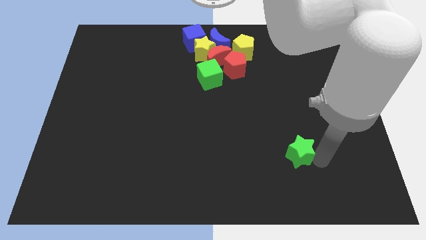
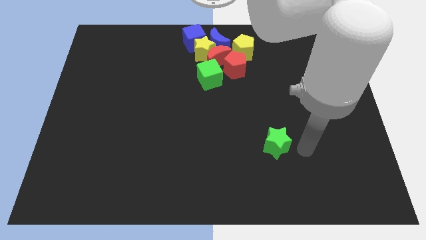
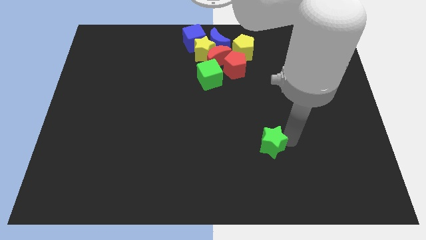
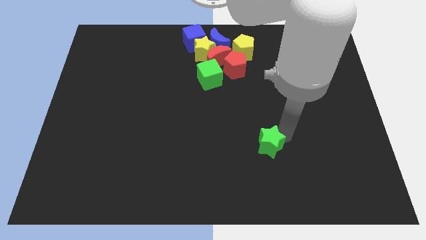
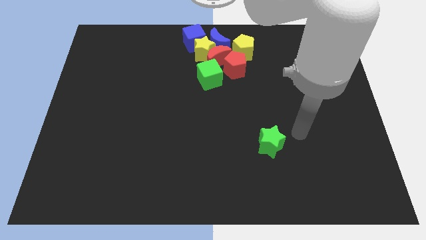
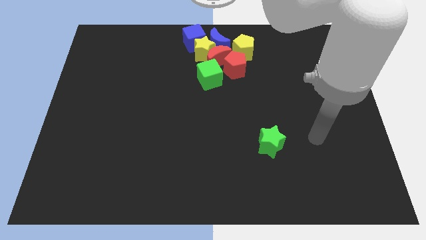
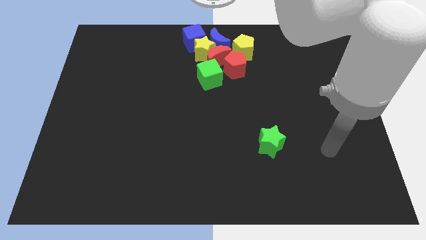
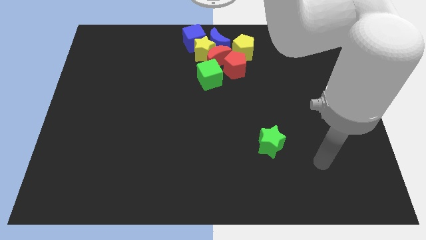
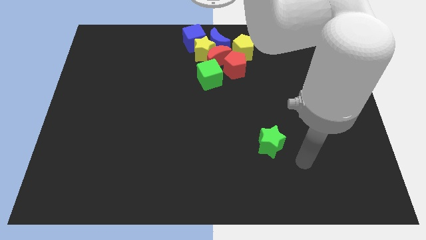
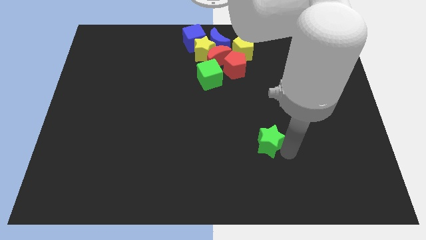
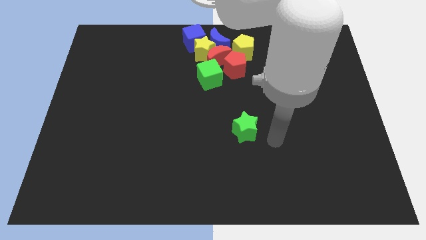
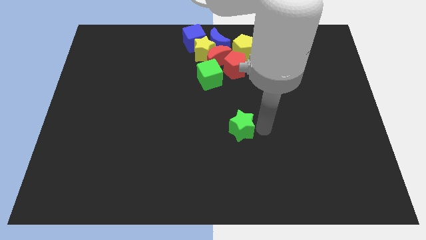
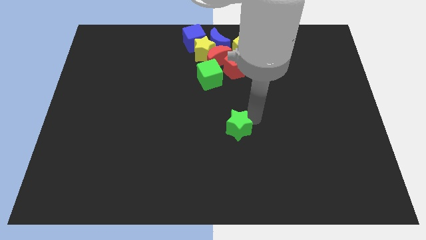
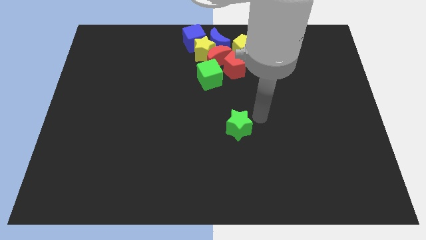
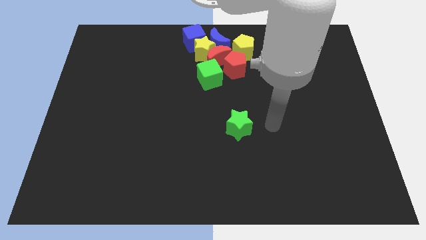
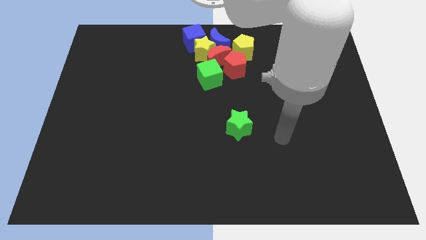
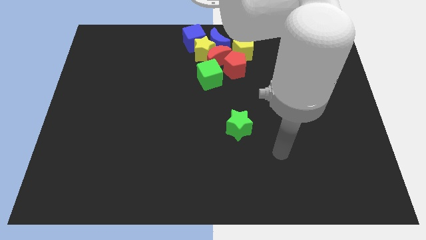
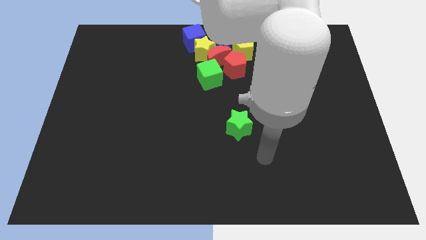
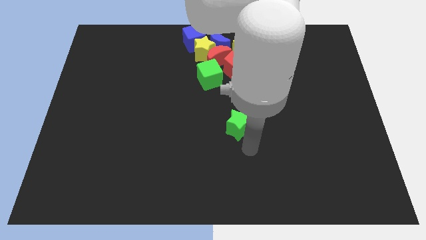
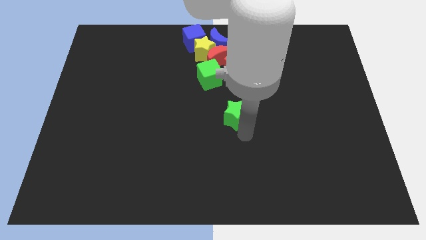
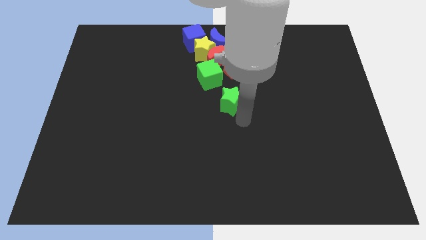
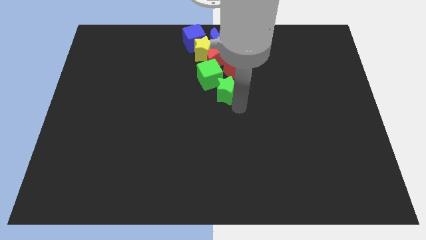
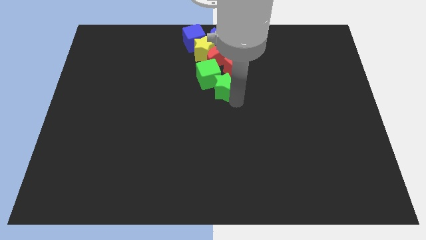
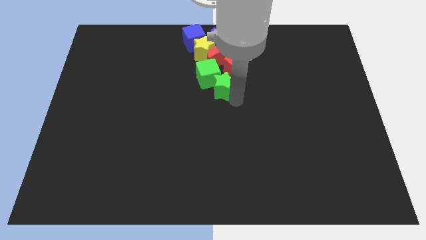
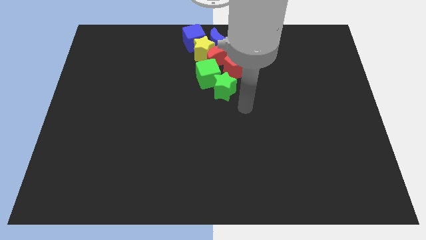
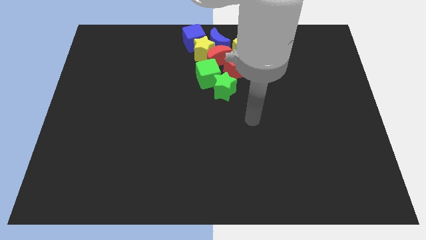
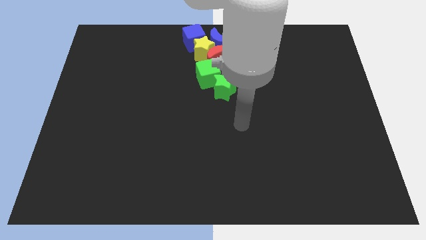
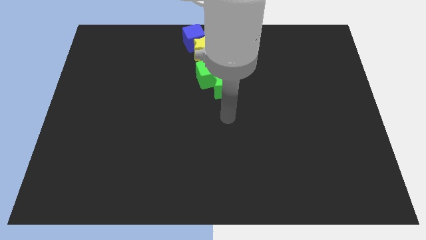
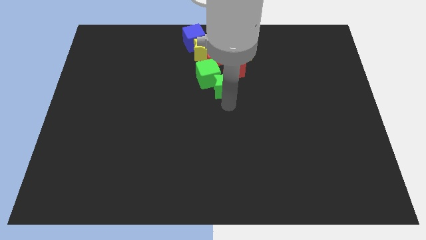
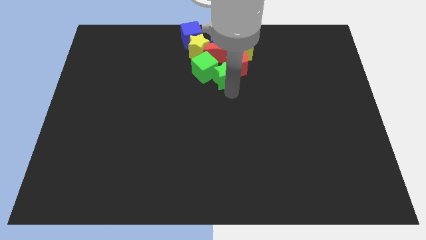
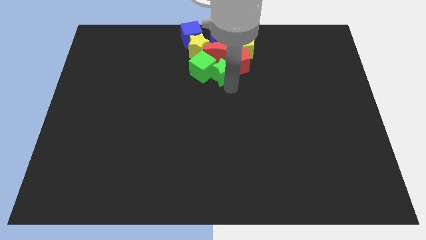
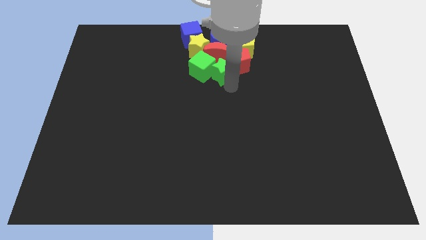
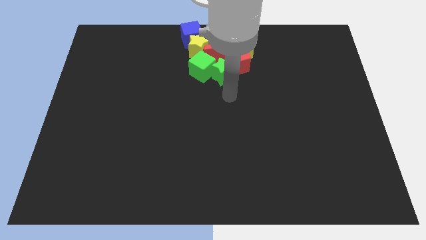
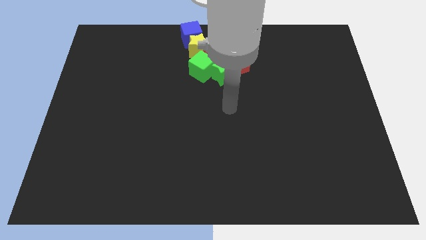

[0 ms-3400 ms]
push the green star into the green cube and red pentagon

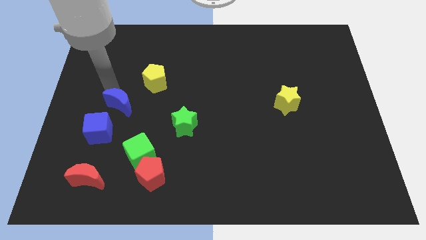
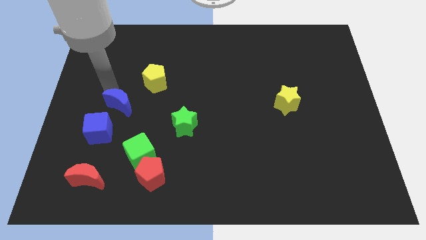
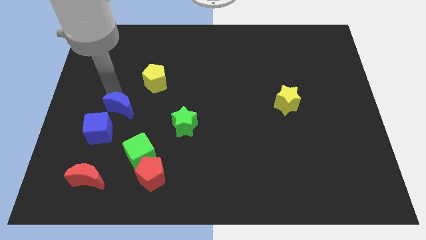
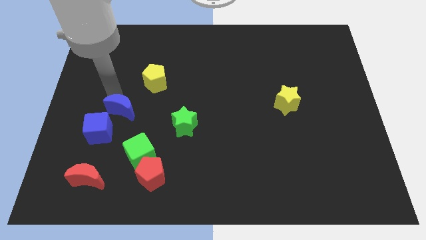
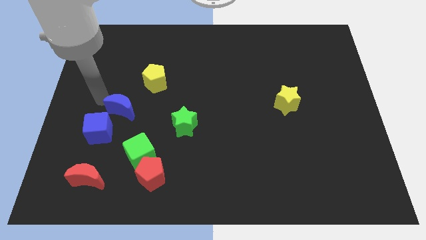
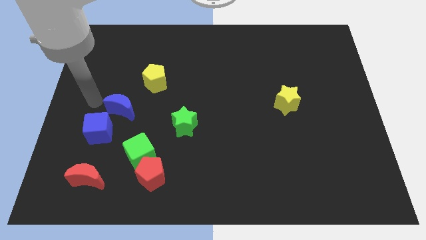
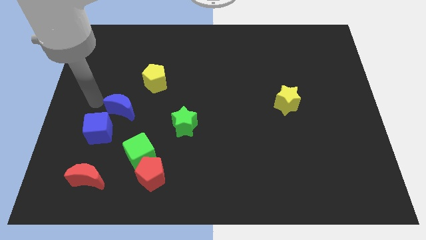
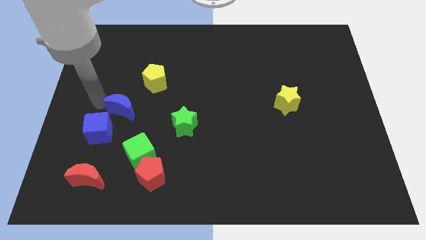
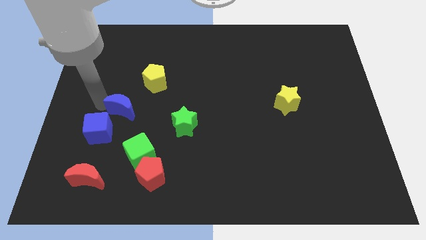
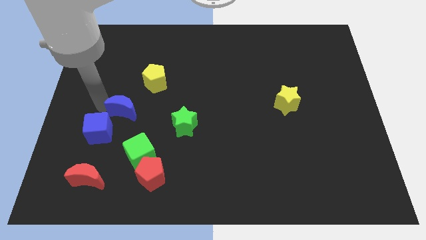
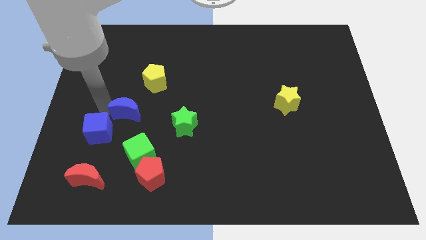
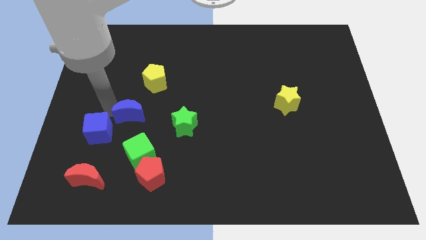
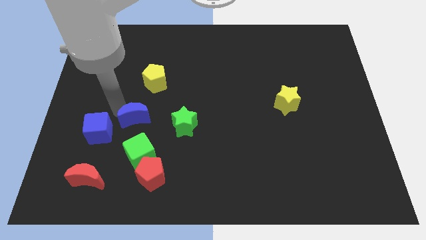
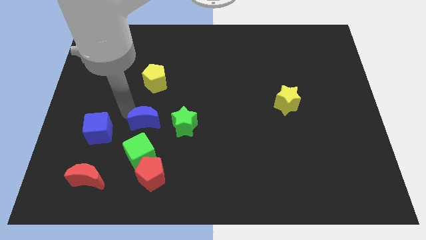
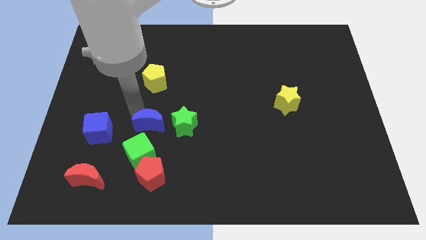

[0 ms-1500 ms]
move blue moon left beside the green star

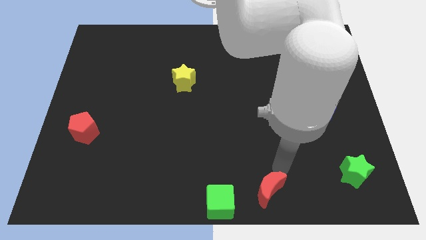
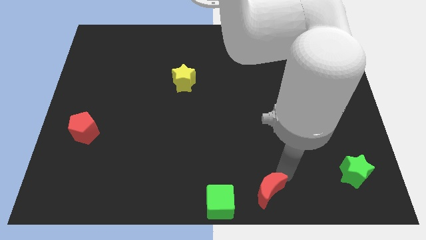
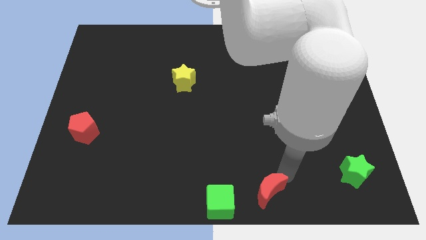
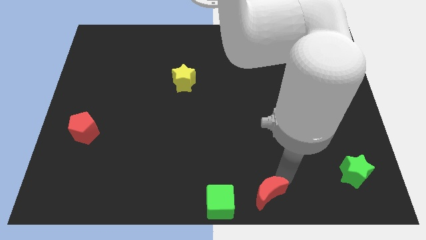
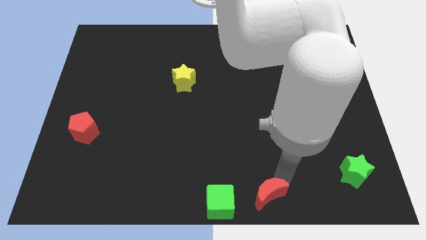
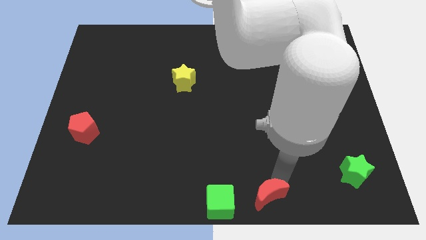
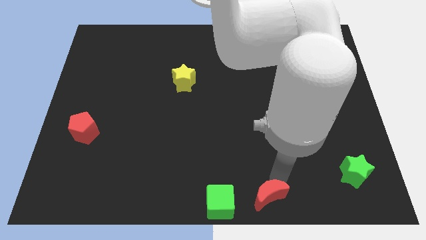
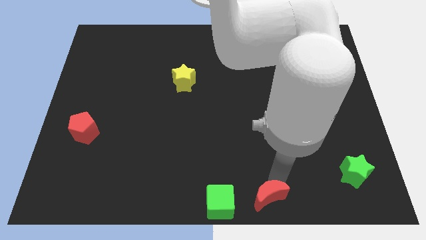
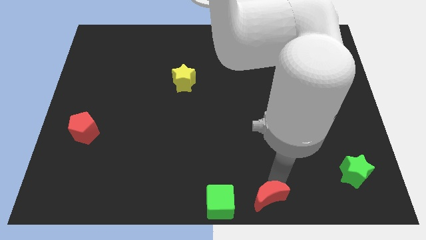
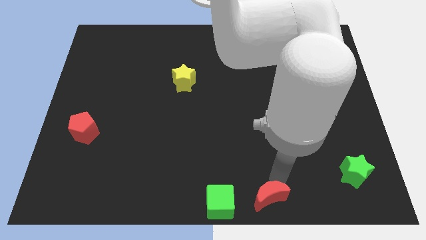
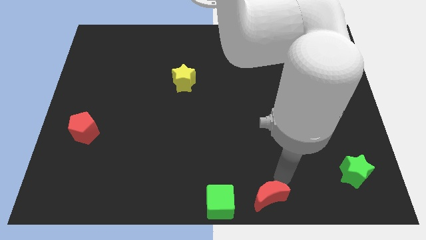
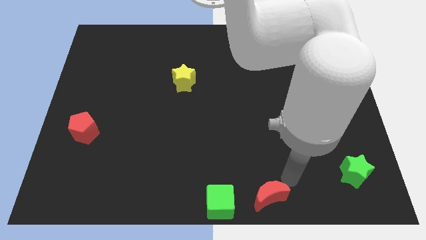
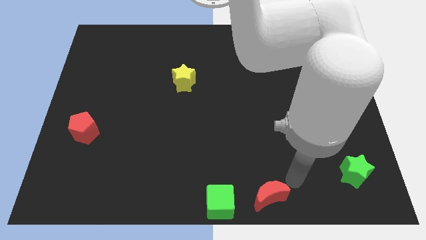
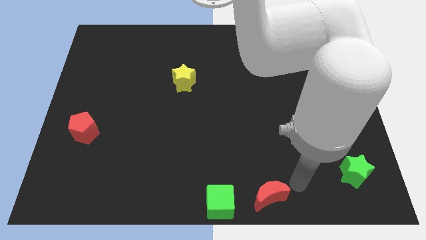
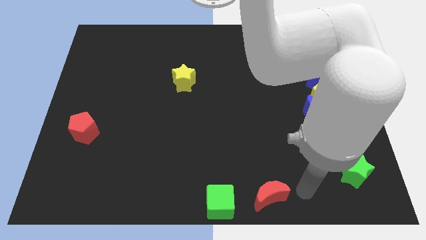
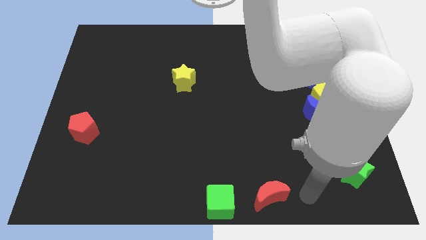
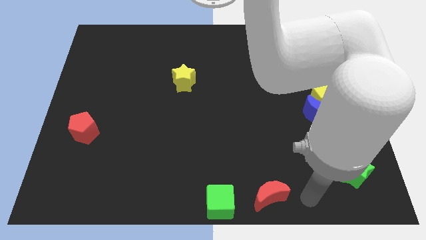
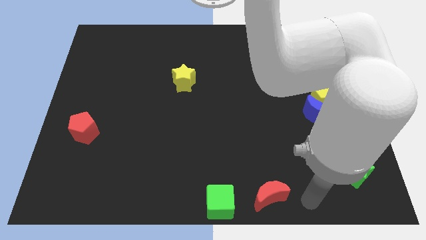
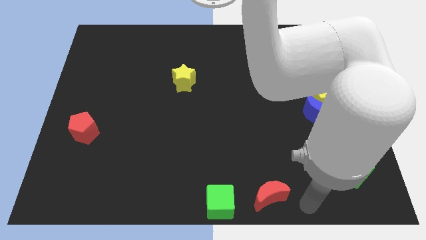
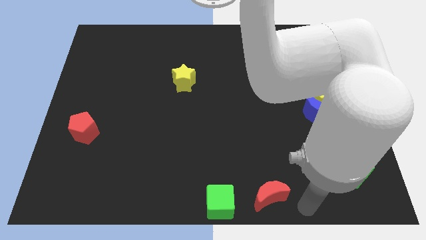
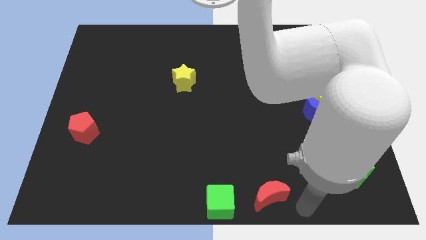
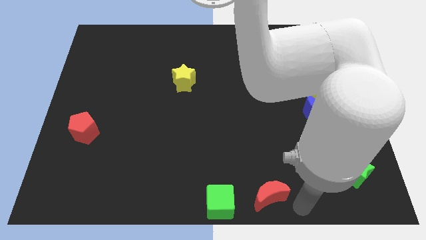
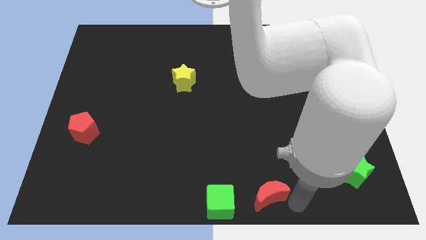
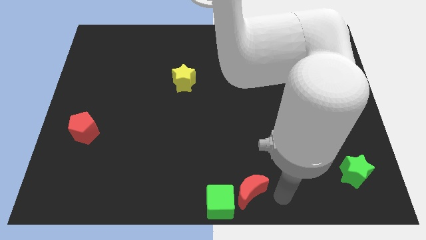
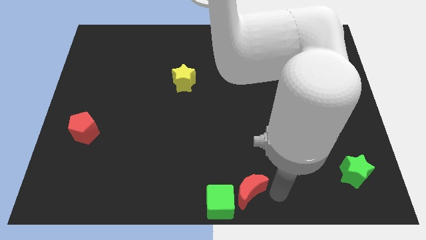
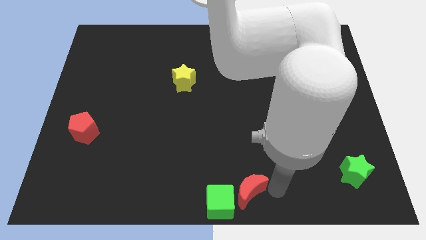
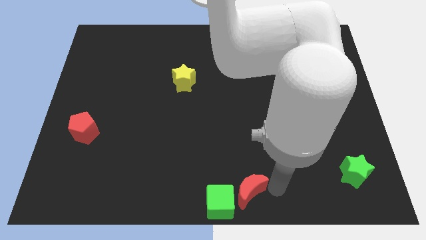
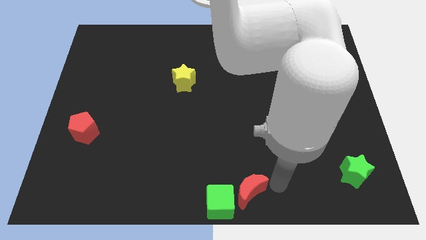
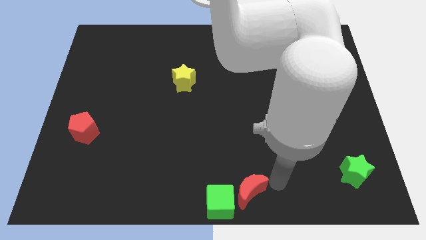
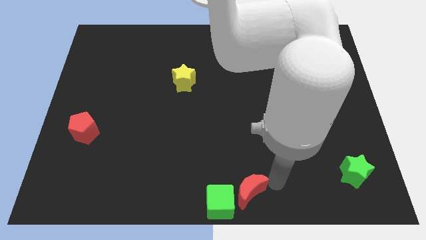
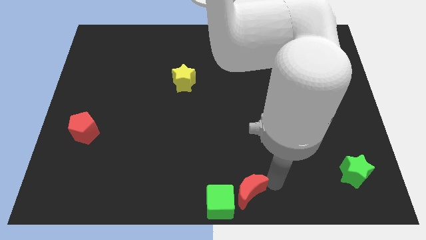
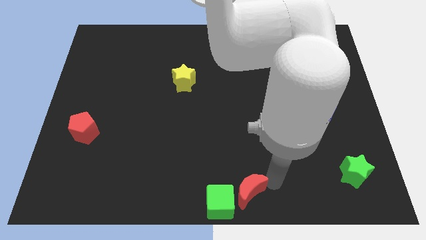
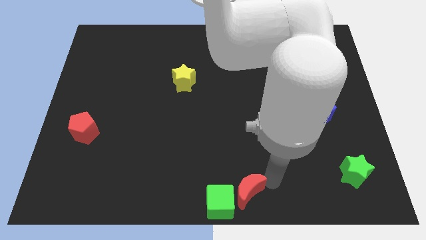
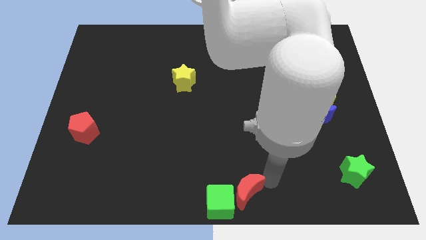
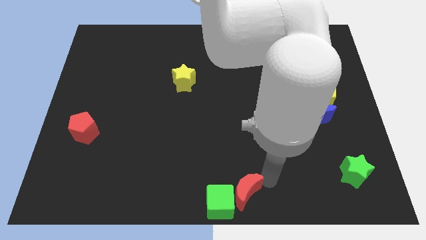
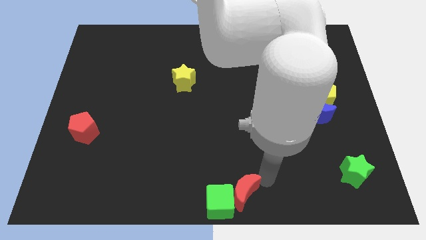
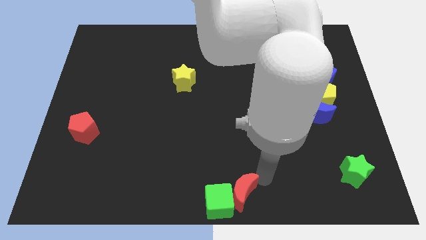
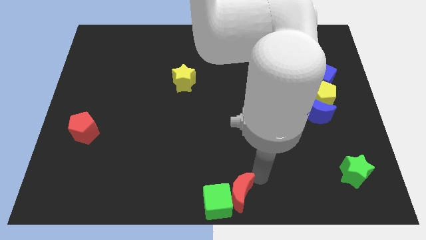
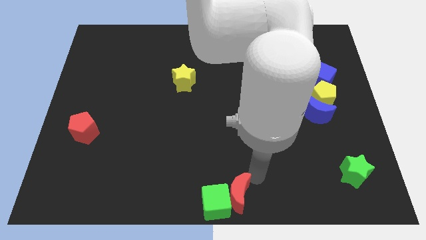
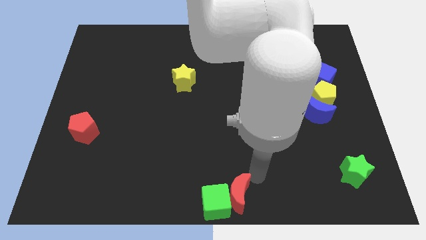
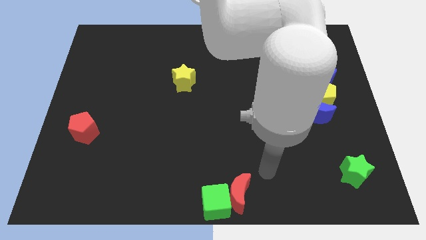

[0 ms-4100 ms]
push the red crescent into the green cube
